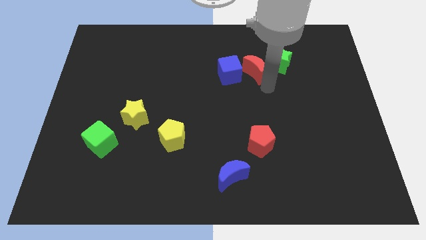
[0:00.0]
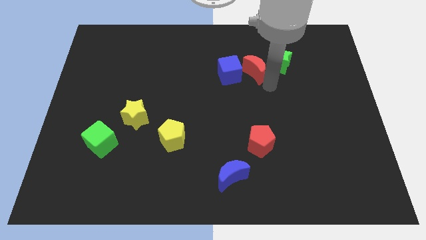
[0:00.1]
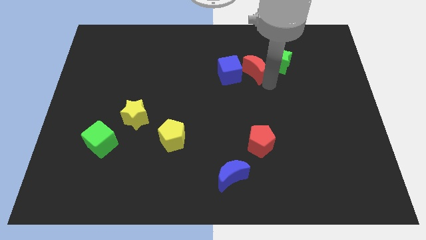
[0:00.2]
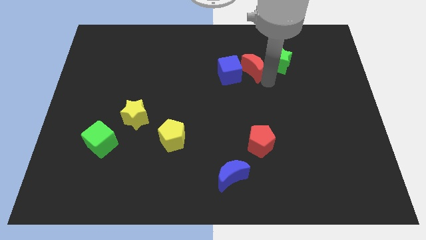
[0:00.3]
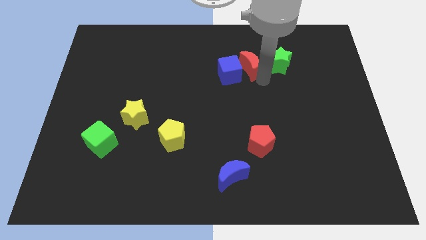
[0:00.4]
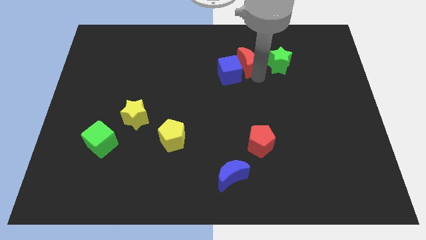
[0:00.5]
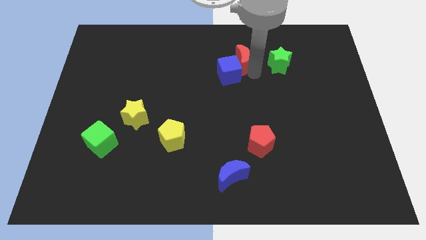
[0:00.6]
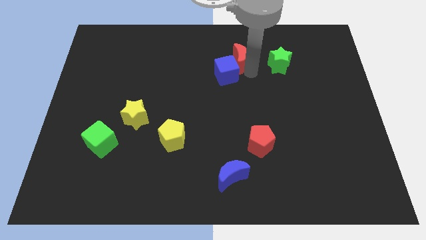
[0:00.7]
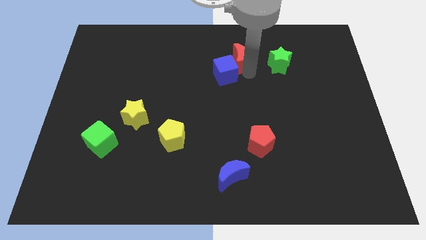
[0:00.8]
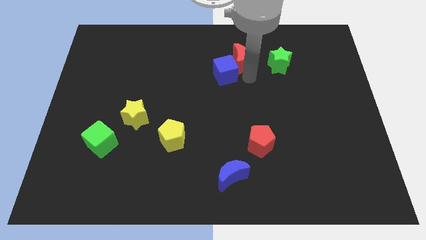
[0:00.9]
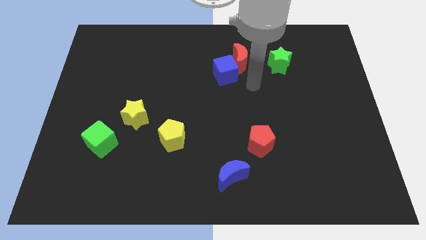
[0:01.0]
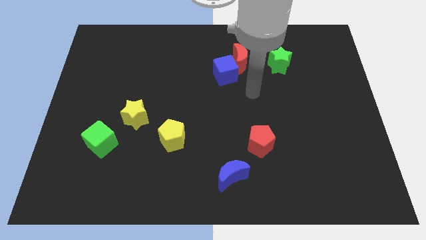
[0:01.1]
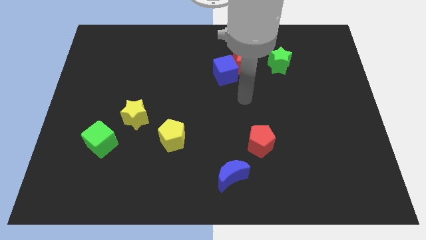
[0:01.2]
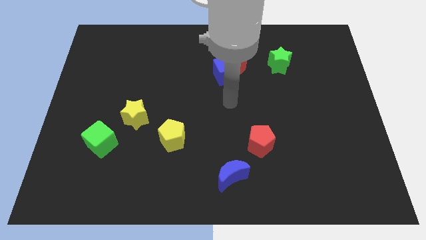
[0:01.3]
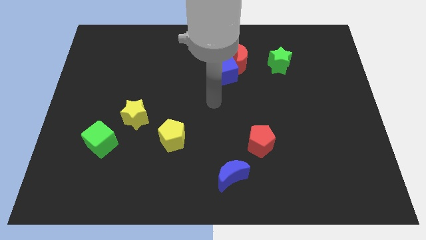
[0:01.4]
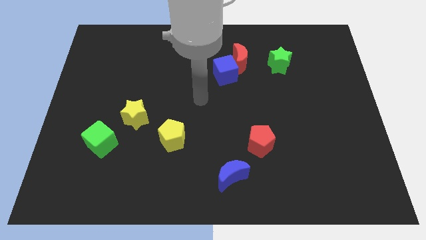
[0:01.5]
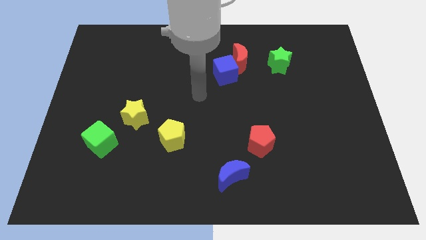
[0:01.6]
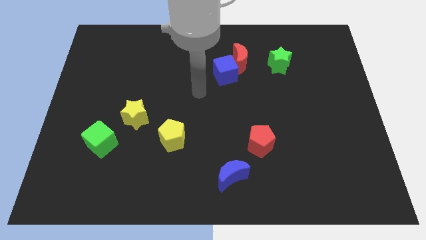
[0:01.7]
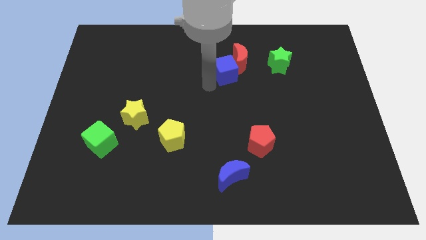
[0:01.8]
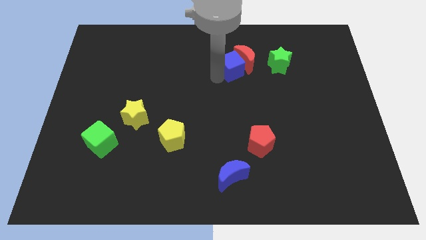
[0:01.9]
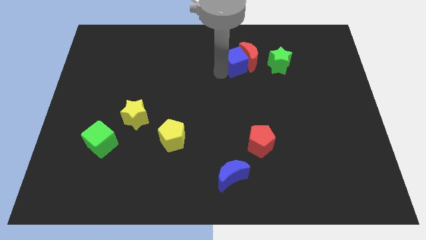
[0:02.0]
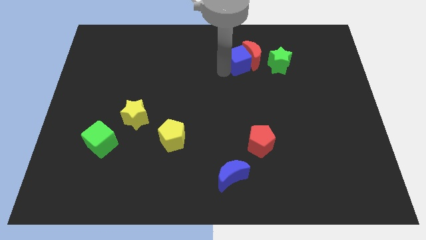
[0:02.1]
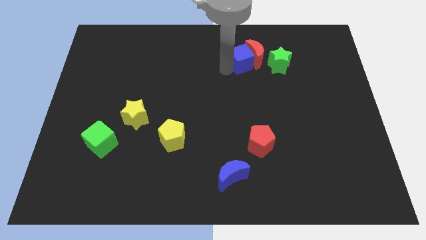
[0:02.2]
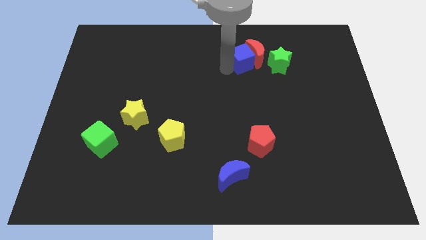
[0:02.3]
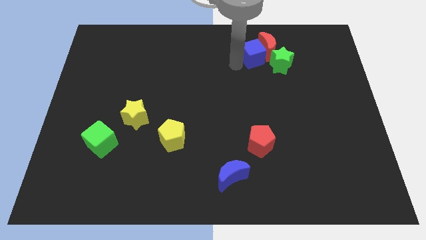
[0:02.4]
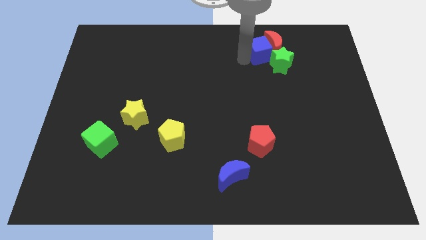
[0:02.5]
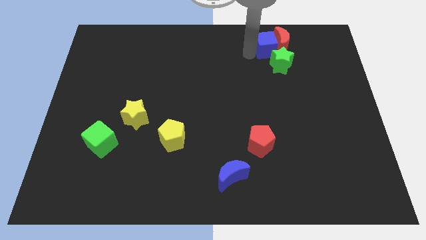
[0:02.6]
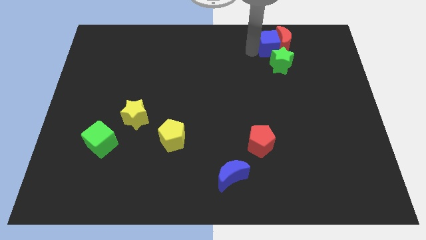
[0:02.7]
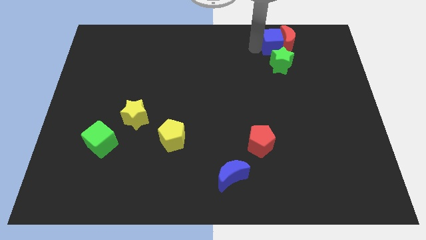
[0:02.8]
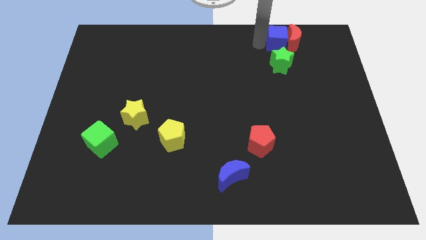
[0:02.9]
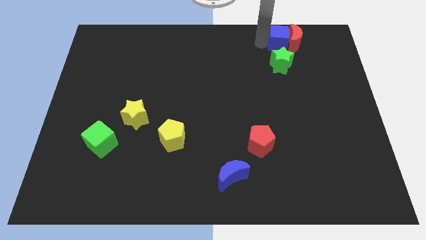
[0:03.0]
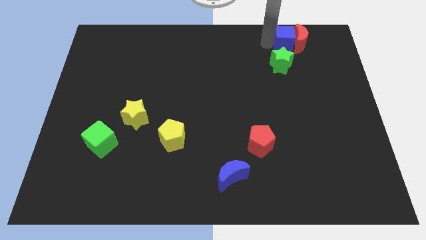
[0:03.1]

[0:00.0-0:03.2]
place the blue cube along with the red moon on top of green star

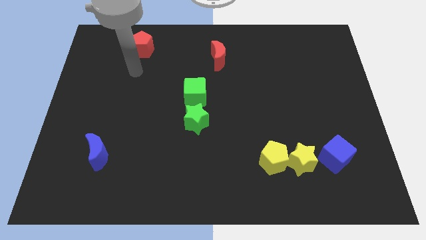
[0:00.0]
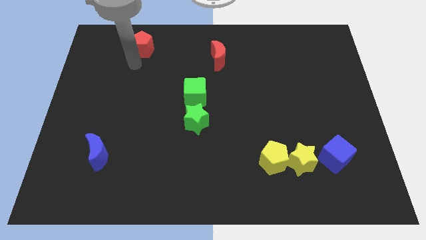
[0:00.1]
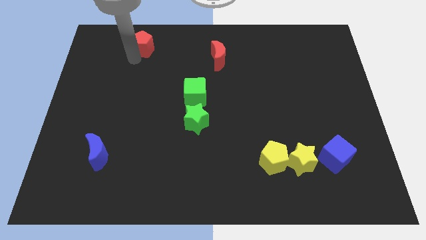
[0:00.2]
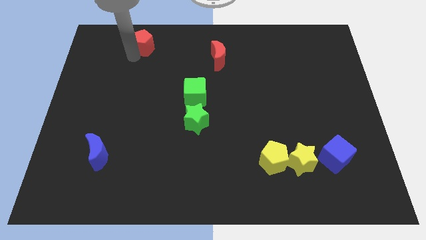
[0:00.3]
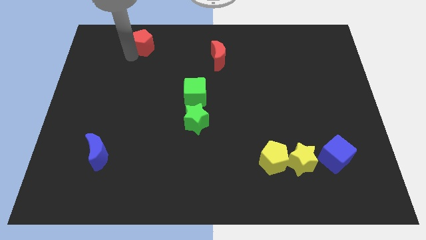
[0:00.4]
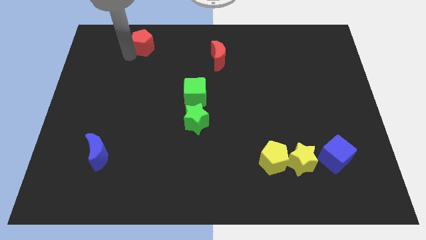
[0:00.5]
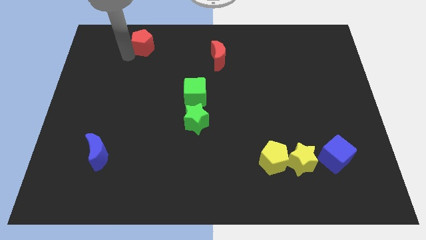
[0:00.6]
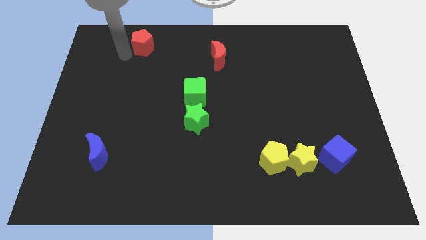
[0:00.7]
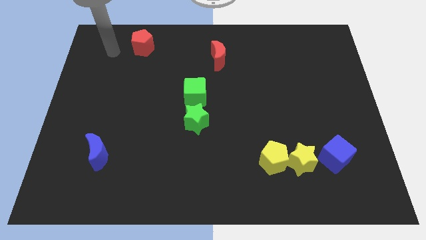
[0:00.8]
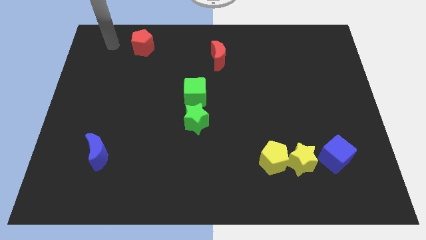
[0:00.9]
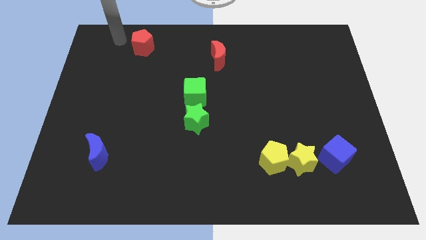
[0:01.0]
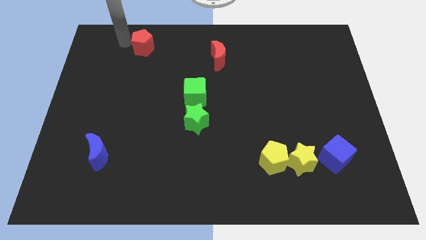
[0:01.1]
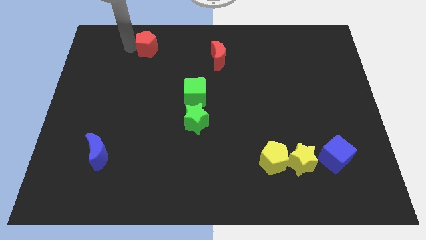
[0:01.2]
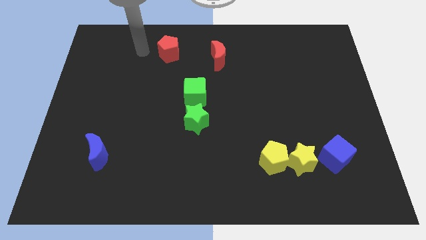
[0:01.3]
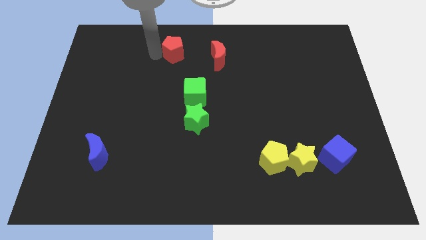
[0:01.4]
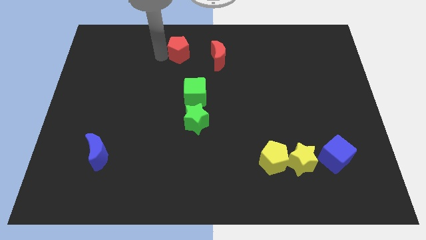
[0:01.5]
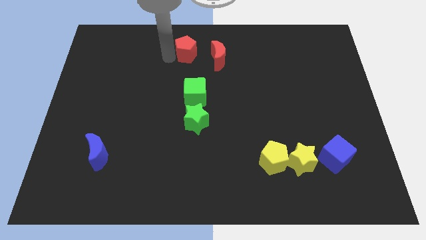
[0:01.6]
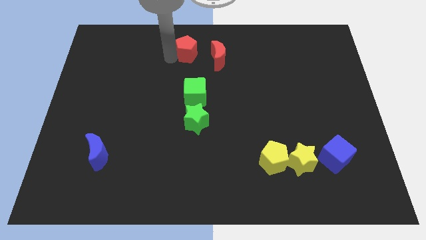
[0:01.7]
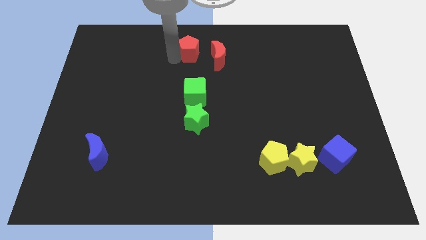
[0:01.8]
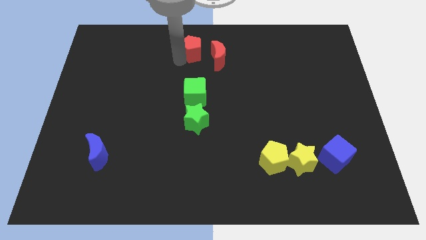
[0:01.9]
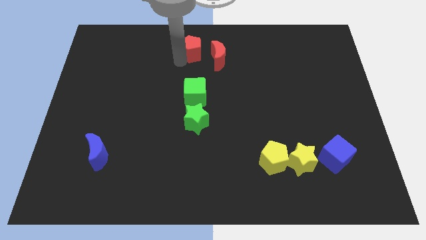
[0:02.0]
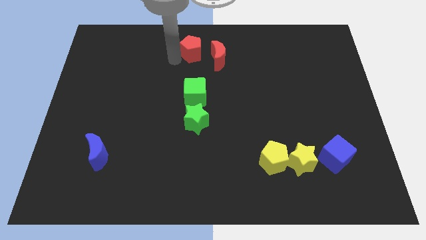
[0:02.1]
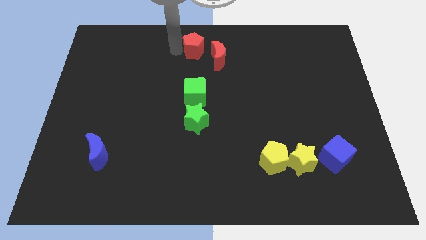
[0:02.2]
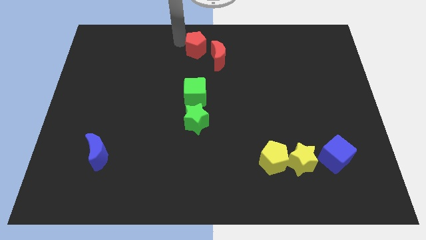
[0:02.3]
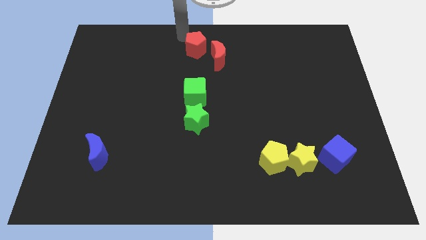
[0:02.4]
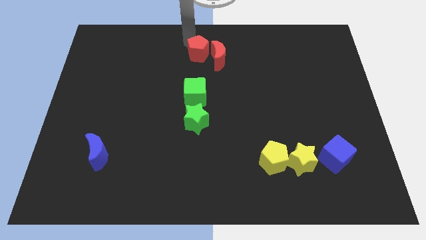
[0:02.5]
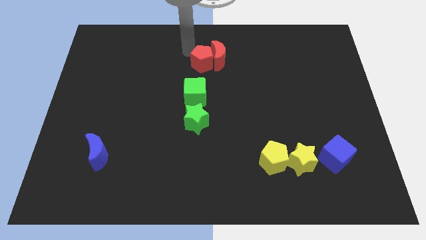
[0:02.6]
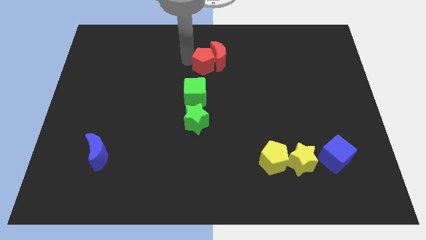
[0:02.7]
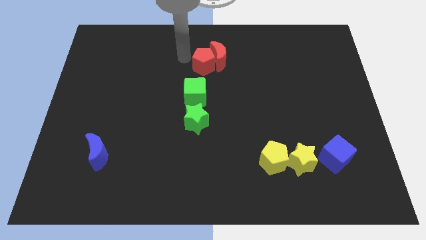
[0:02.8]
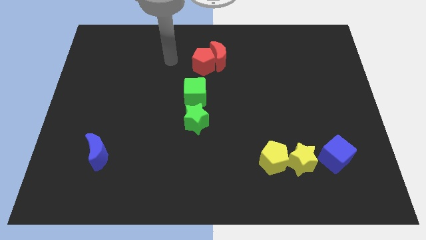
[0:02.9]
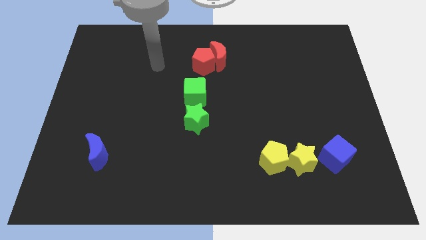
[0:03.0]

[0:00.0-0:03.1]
move red pentagon into red crescent

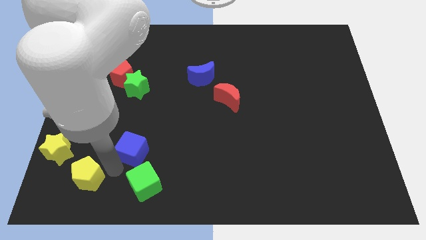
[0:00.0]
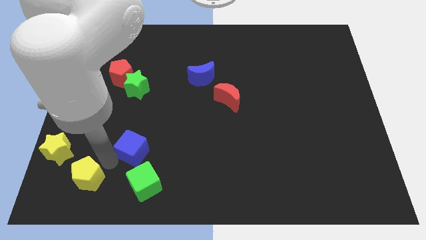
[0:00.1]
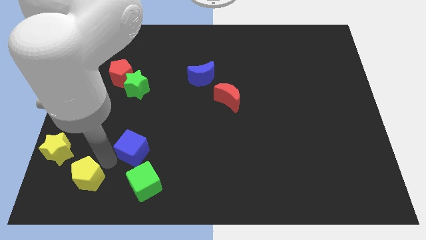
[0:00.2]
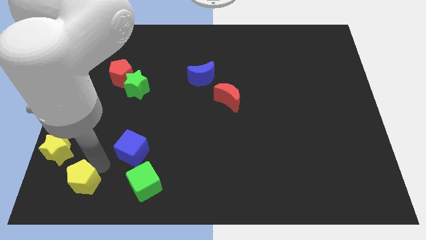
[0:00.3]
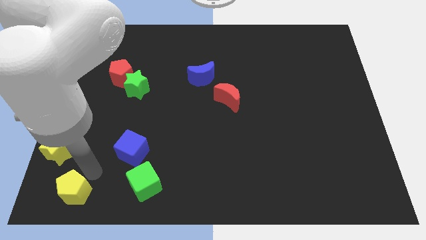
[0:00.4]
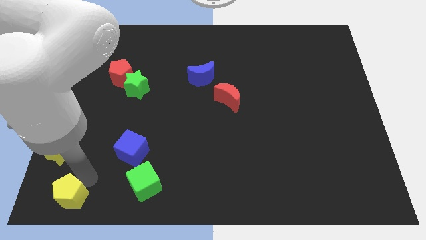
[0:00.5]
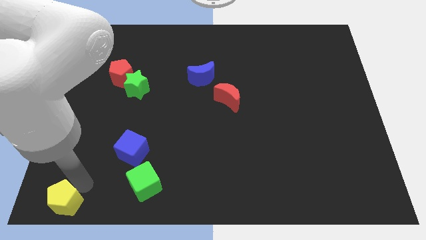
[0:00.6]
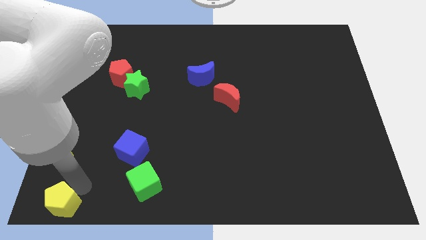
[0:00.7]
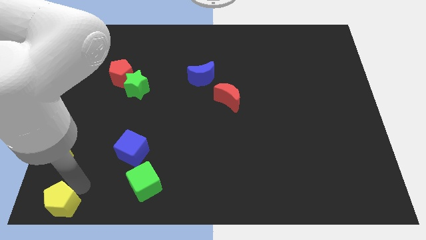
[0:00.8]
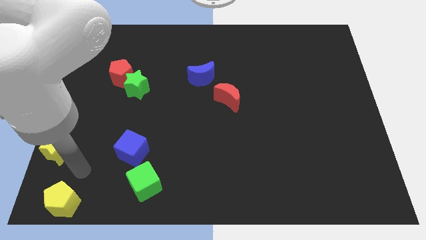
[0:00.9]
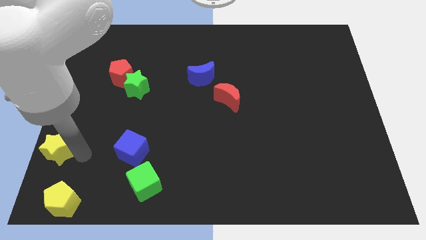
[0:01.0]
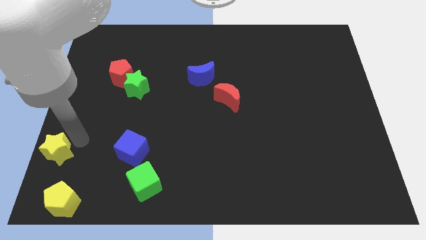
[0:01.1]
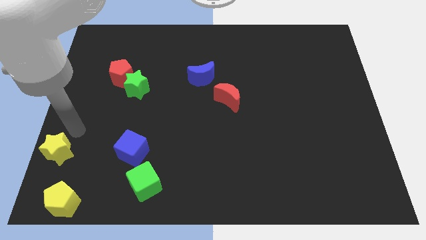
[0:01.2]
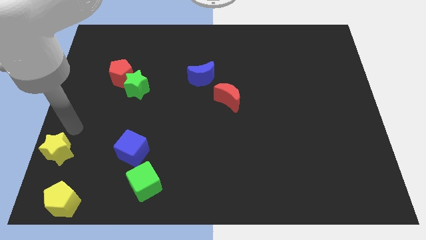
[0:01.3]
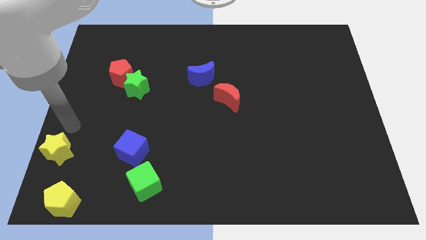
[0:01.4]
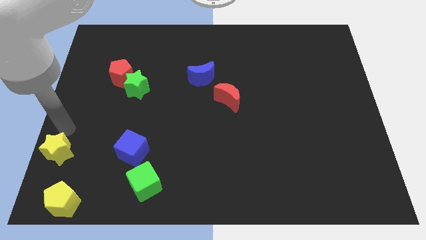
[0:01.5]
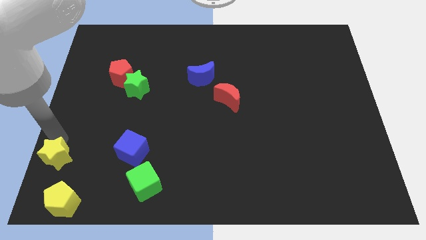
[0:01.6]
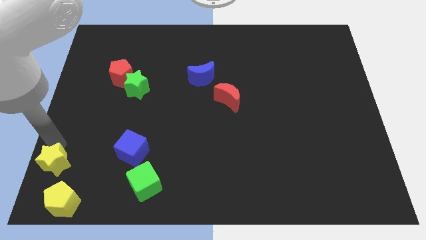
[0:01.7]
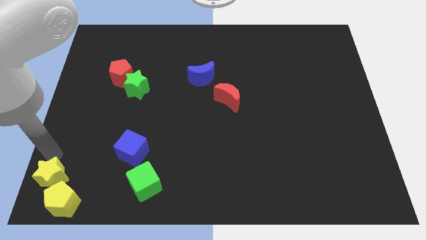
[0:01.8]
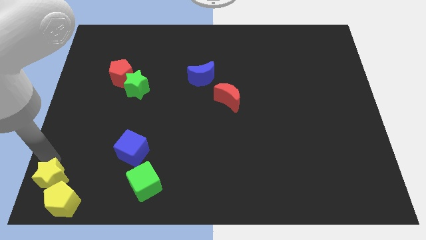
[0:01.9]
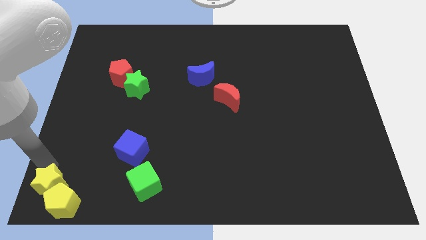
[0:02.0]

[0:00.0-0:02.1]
push the yellow star into the yellow pentagon

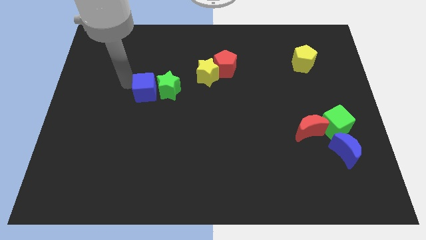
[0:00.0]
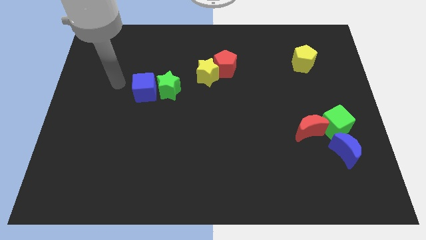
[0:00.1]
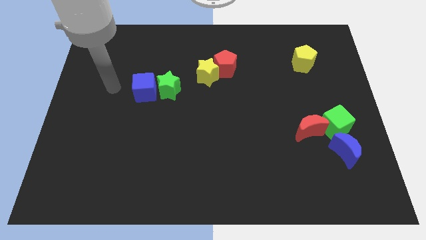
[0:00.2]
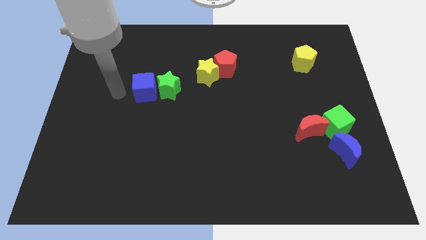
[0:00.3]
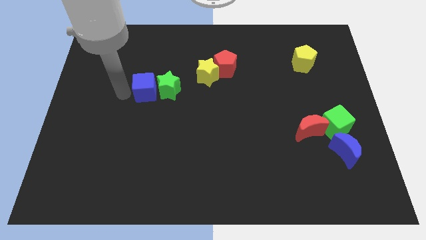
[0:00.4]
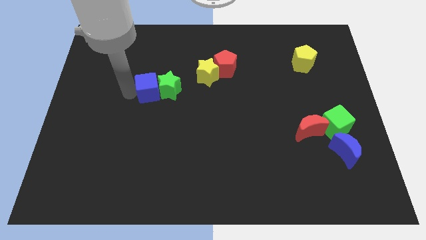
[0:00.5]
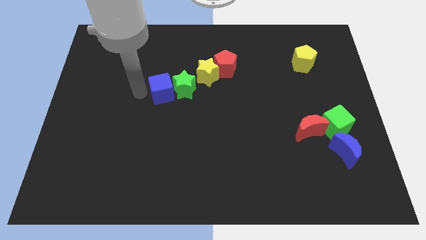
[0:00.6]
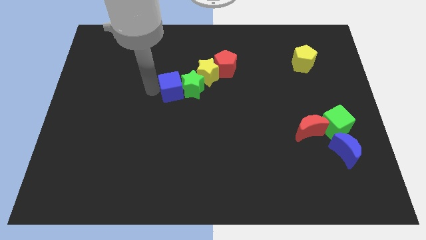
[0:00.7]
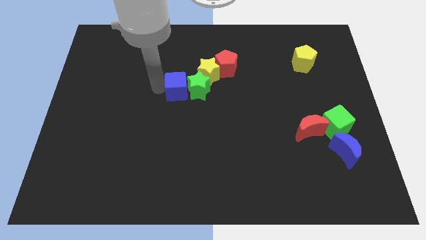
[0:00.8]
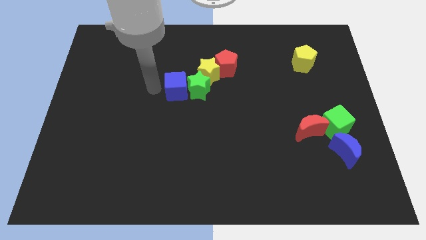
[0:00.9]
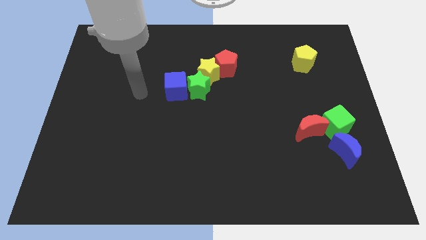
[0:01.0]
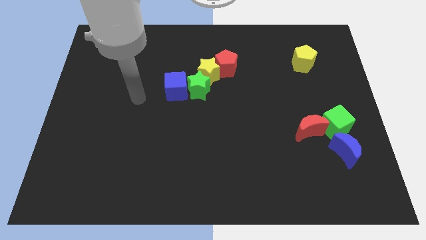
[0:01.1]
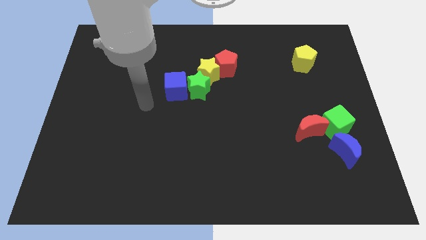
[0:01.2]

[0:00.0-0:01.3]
place green star to the bottom of yellow star
